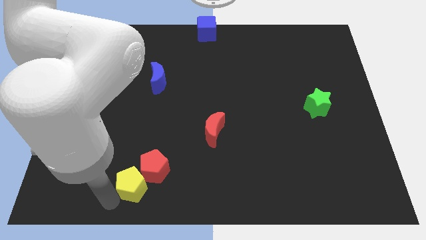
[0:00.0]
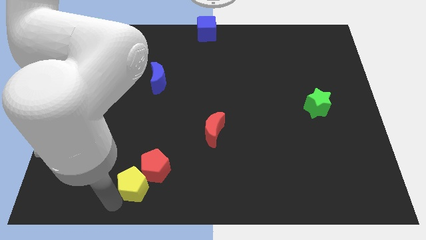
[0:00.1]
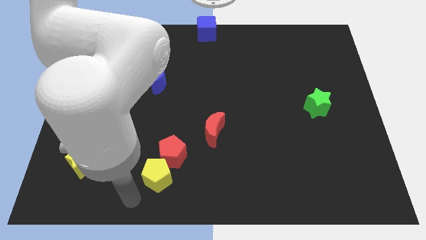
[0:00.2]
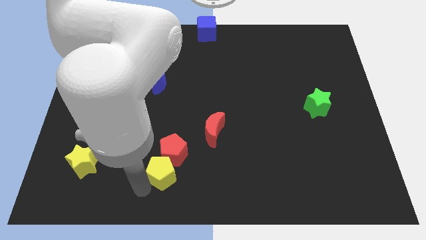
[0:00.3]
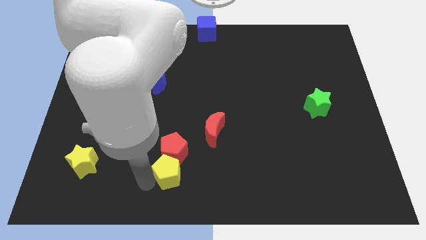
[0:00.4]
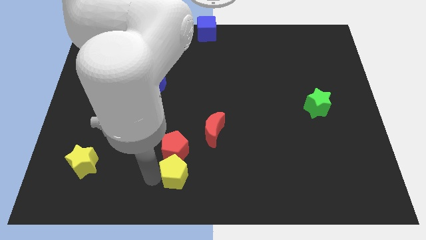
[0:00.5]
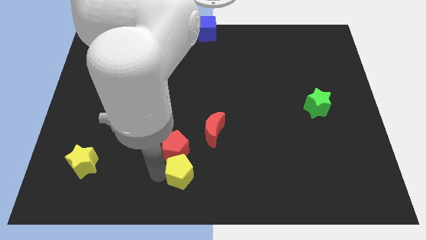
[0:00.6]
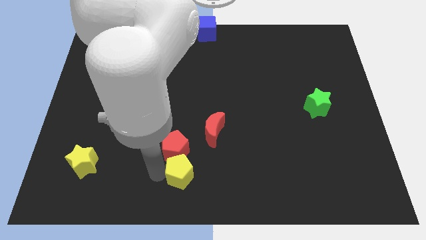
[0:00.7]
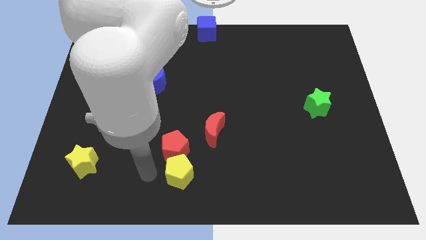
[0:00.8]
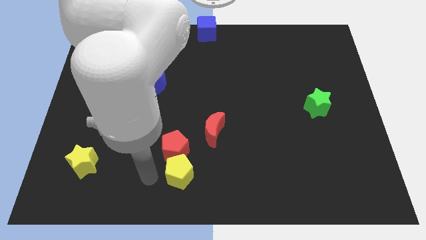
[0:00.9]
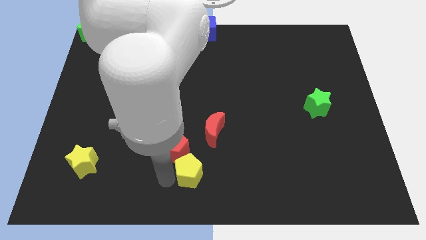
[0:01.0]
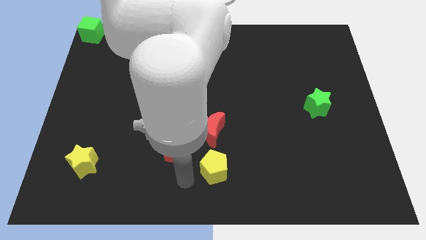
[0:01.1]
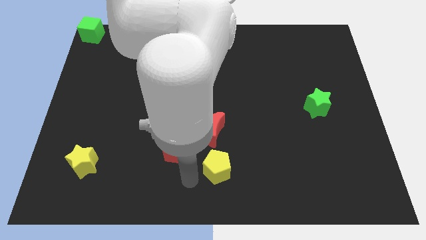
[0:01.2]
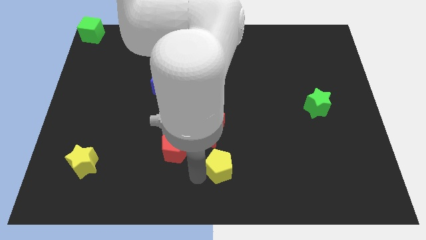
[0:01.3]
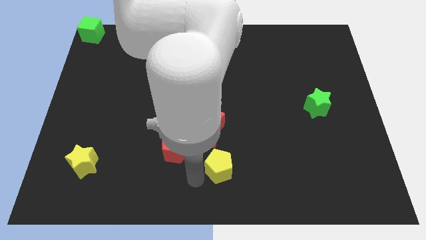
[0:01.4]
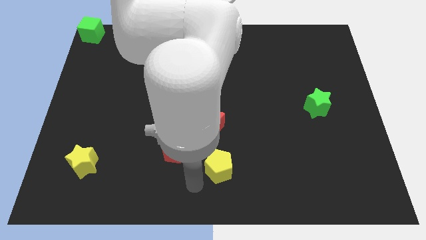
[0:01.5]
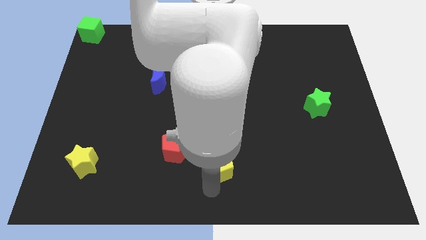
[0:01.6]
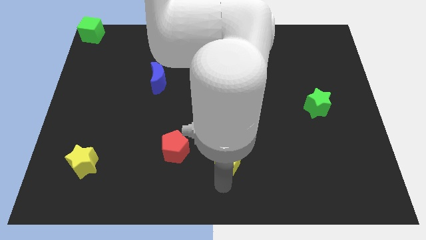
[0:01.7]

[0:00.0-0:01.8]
separate the yellow pentagon from red pentagon

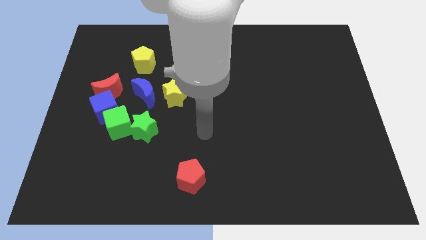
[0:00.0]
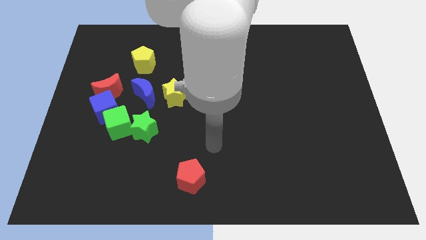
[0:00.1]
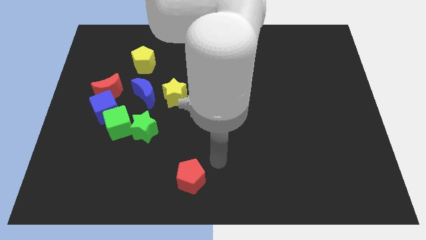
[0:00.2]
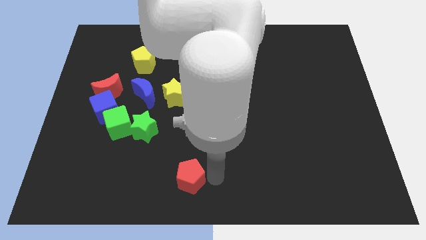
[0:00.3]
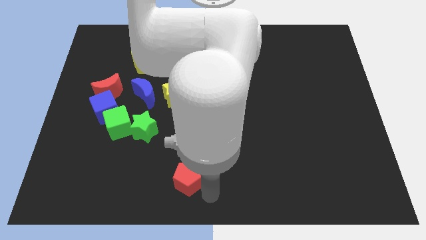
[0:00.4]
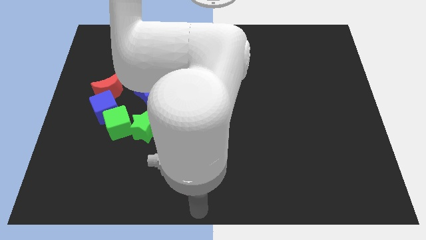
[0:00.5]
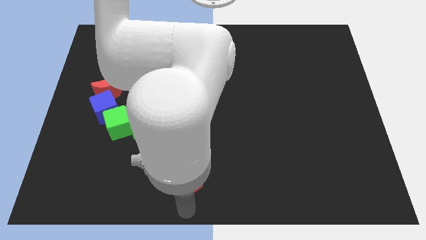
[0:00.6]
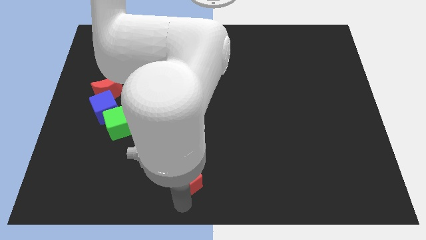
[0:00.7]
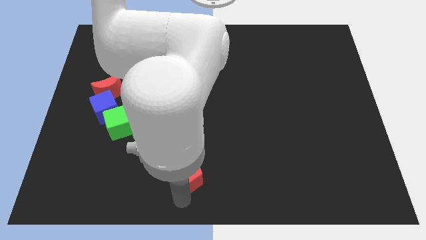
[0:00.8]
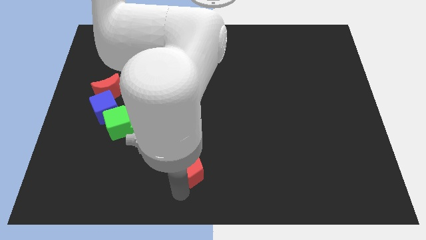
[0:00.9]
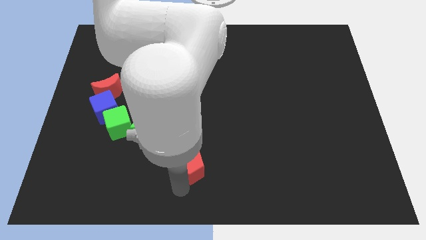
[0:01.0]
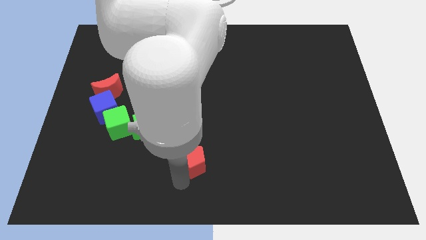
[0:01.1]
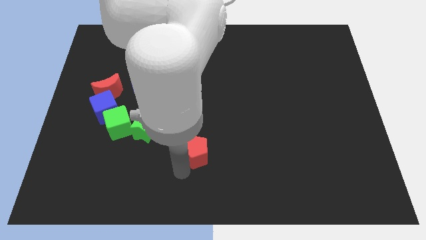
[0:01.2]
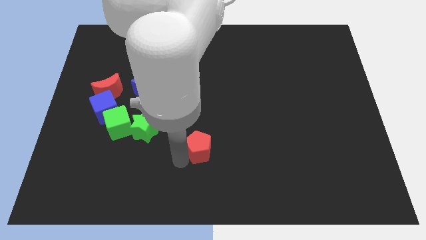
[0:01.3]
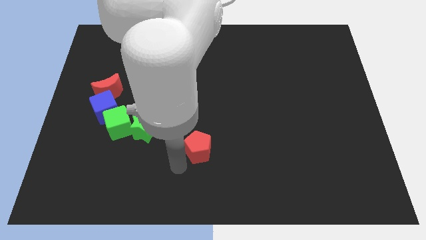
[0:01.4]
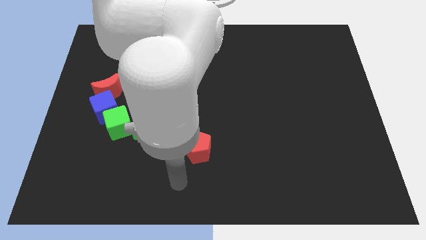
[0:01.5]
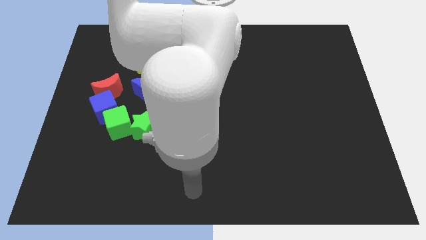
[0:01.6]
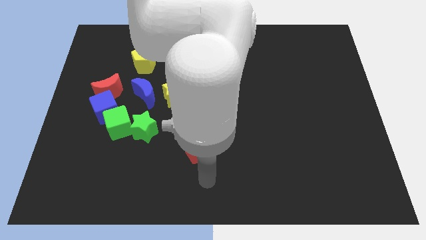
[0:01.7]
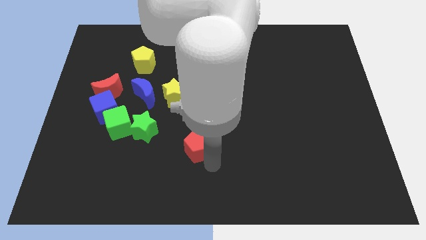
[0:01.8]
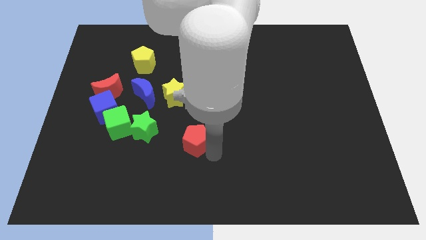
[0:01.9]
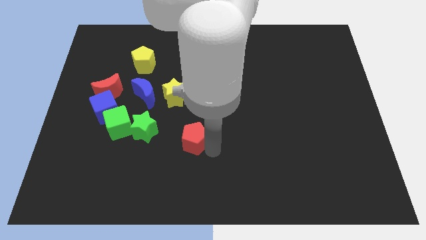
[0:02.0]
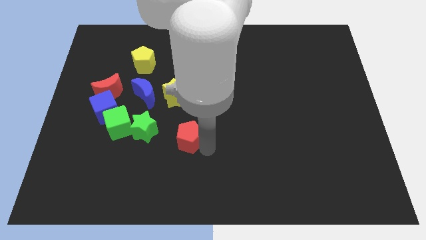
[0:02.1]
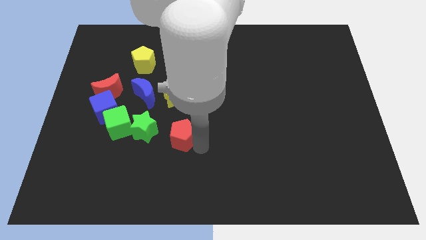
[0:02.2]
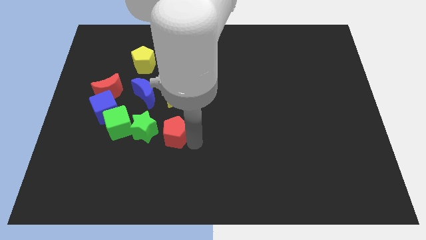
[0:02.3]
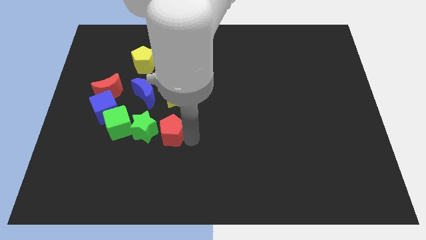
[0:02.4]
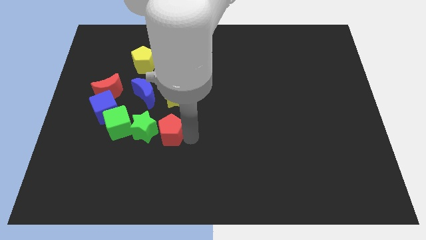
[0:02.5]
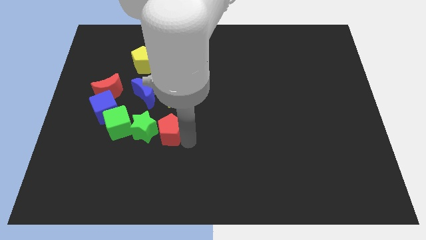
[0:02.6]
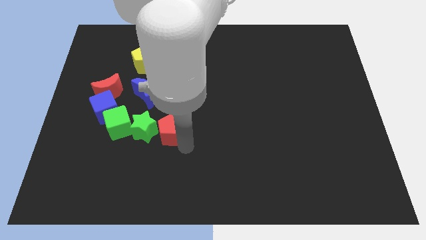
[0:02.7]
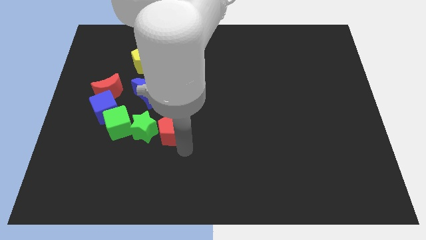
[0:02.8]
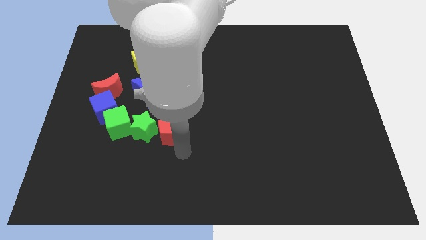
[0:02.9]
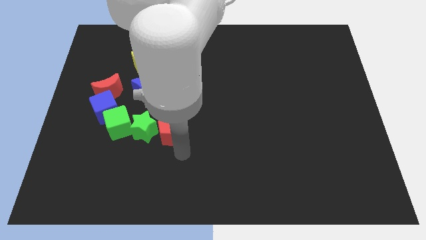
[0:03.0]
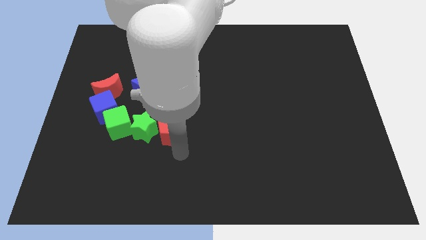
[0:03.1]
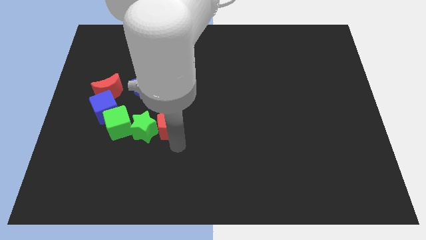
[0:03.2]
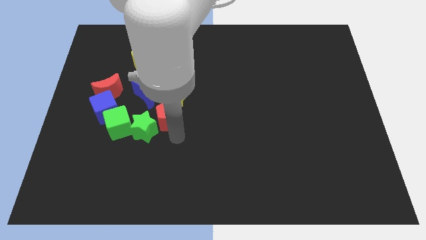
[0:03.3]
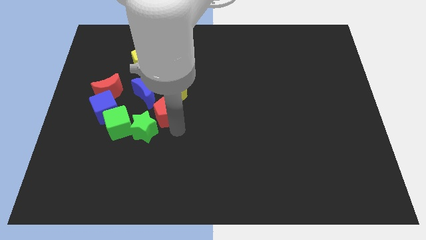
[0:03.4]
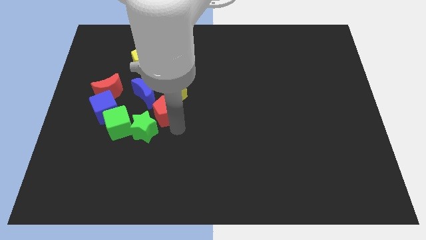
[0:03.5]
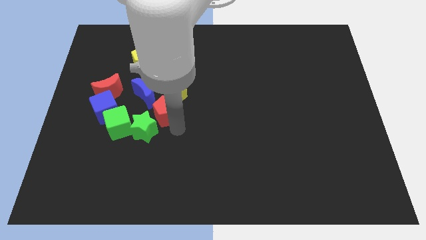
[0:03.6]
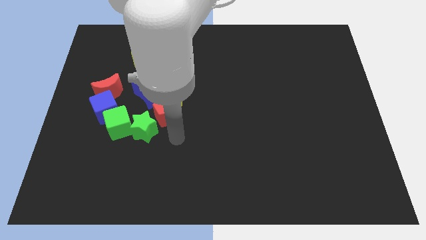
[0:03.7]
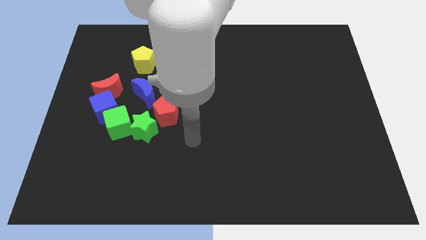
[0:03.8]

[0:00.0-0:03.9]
move red pentagon into the group of blocks

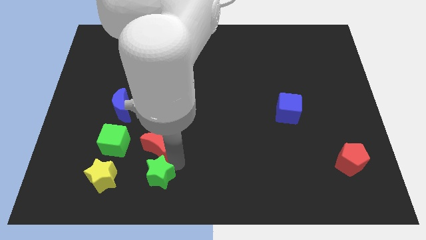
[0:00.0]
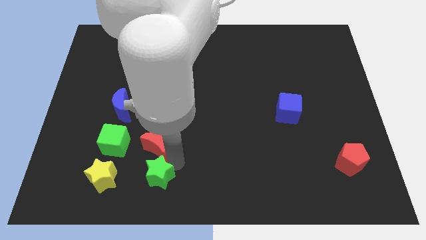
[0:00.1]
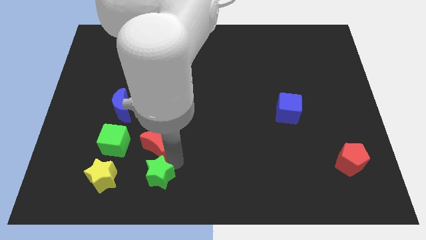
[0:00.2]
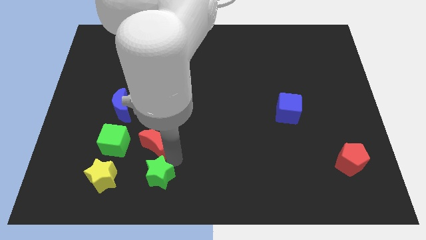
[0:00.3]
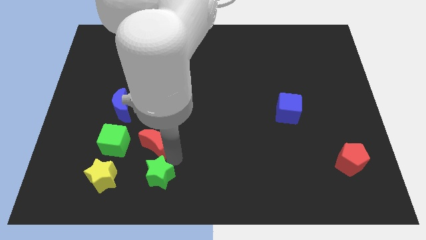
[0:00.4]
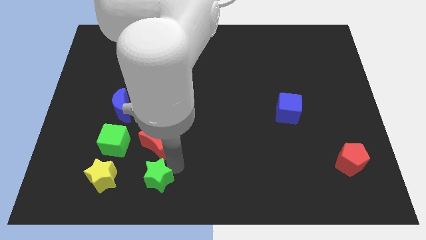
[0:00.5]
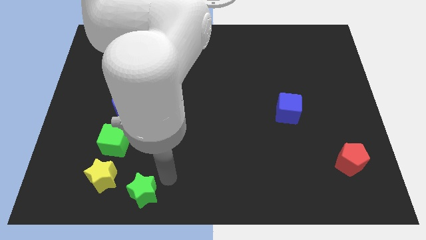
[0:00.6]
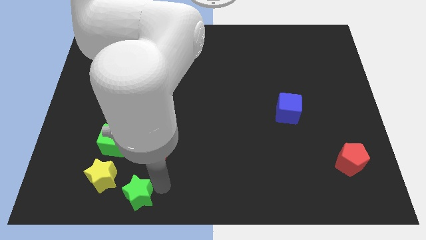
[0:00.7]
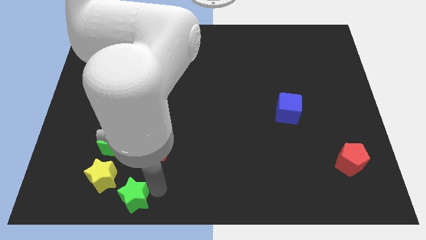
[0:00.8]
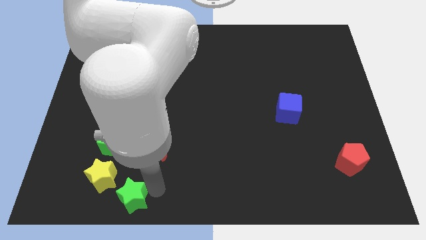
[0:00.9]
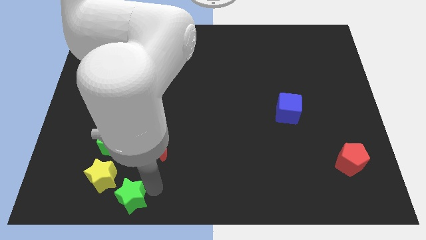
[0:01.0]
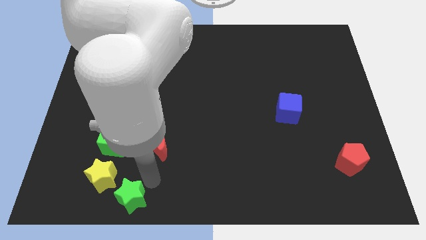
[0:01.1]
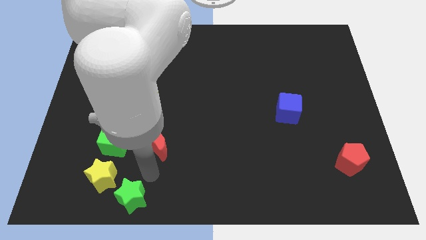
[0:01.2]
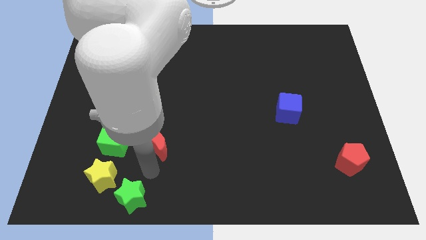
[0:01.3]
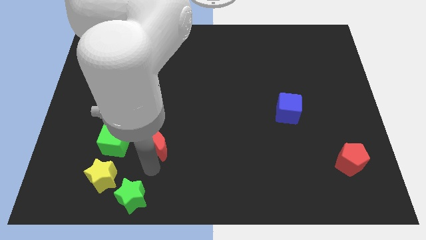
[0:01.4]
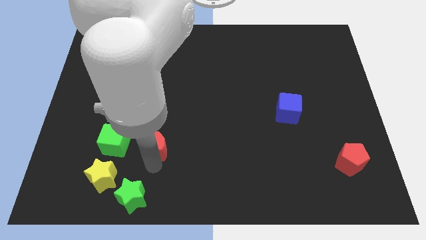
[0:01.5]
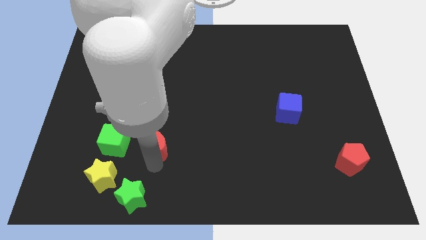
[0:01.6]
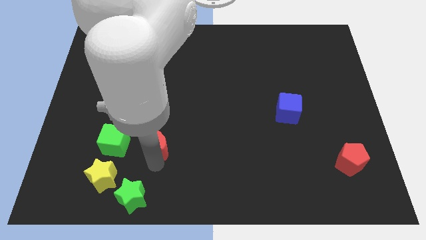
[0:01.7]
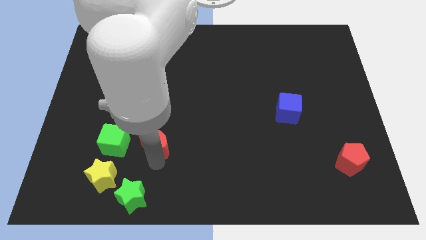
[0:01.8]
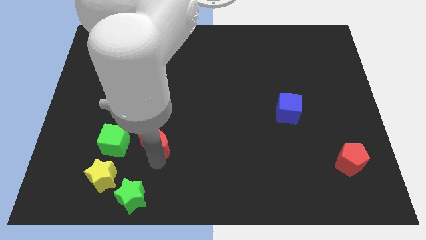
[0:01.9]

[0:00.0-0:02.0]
separate the red crescent and the green star

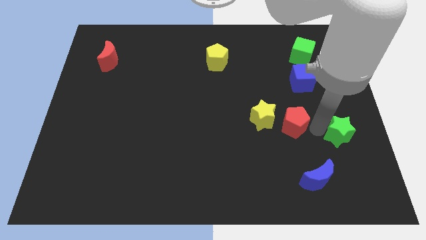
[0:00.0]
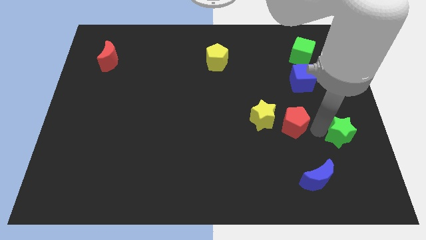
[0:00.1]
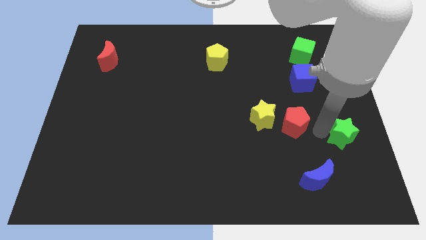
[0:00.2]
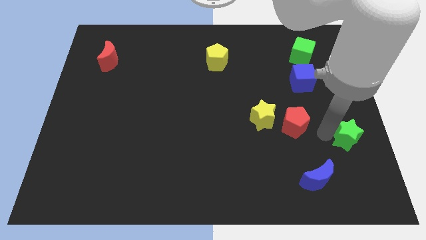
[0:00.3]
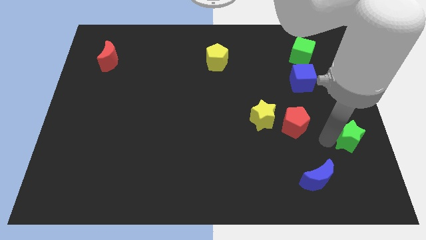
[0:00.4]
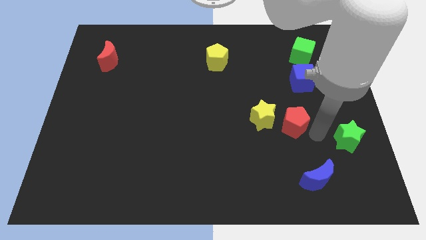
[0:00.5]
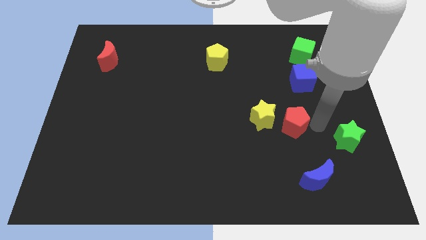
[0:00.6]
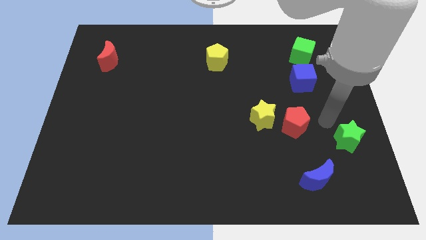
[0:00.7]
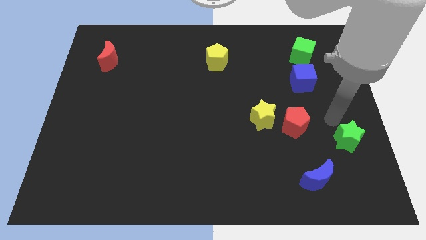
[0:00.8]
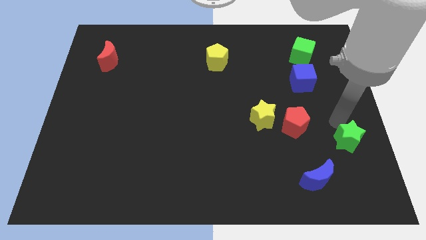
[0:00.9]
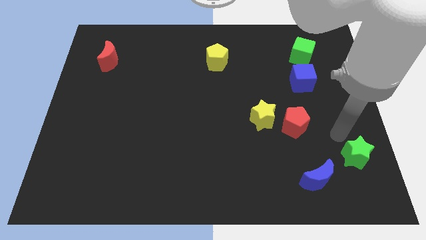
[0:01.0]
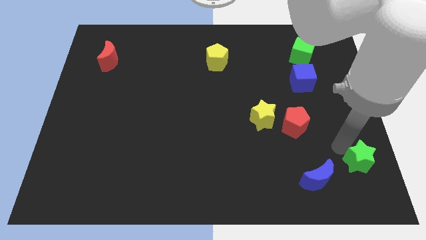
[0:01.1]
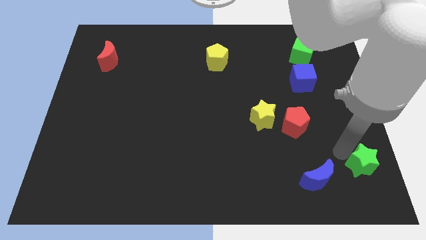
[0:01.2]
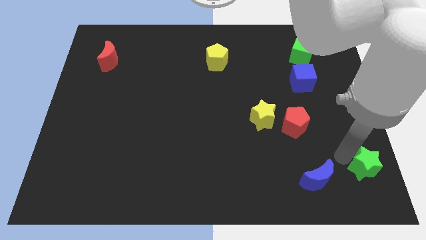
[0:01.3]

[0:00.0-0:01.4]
push the green star towards the right bottom to the board
